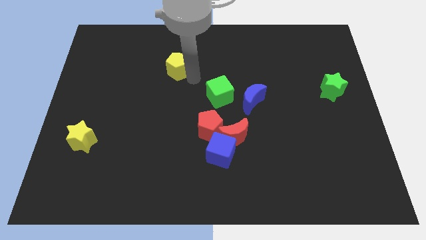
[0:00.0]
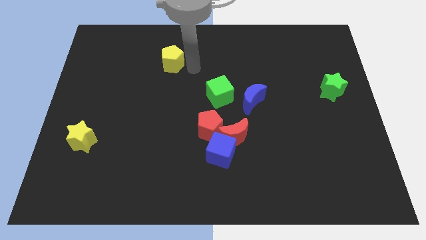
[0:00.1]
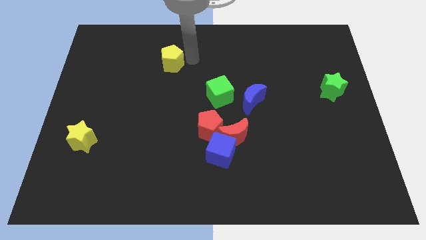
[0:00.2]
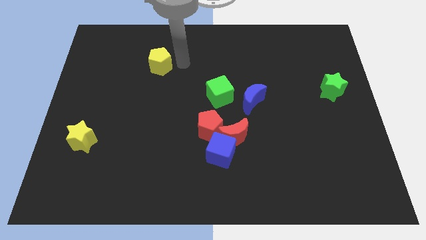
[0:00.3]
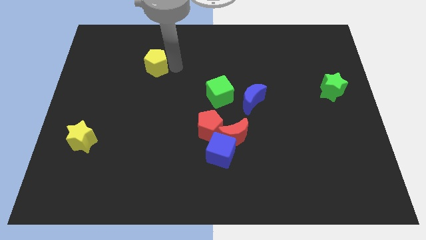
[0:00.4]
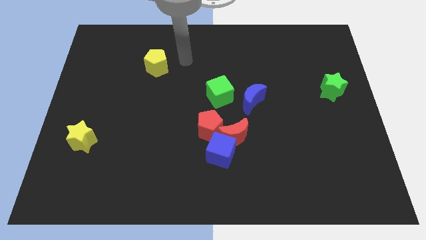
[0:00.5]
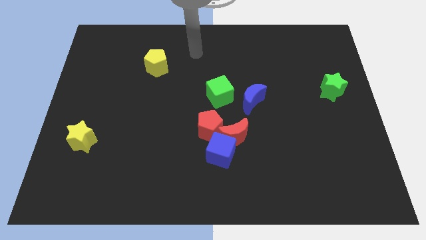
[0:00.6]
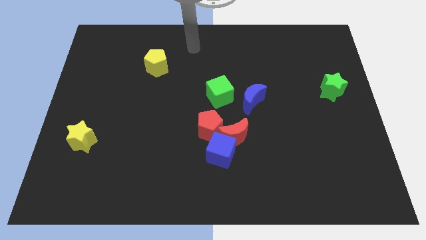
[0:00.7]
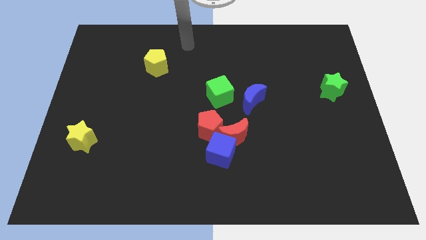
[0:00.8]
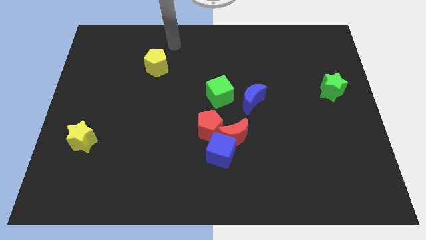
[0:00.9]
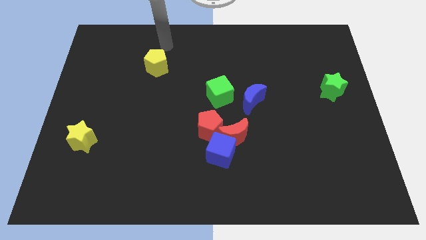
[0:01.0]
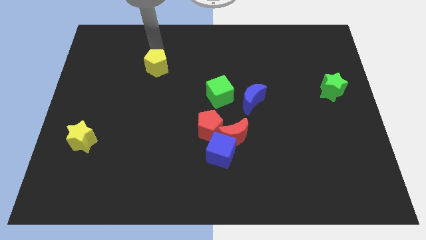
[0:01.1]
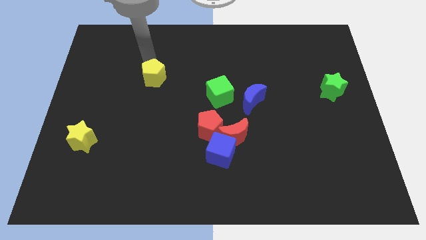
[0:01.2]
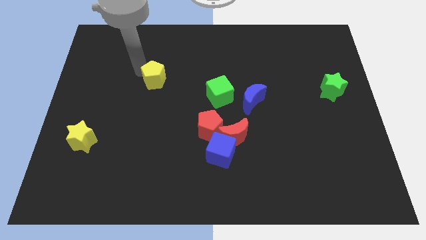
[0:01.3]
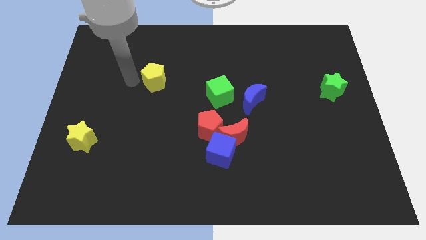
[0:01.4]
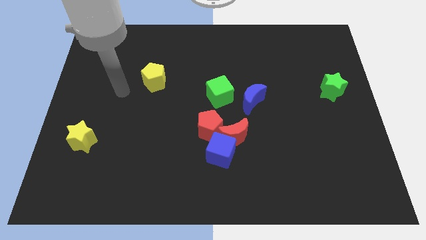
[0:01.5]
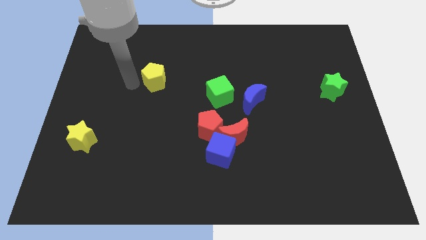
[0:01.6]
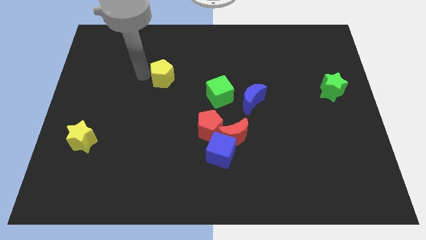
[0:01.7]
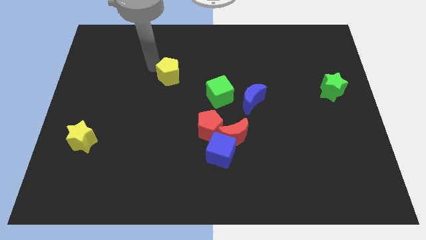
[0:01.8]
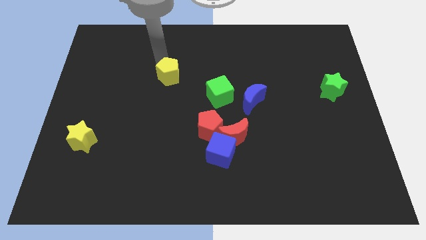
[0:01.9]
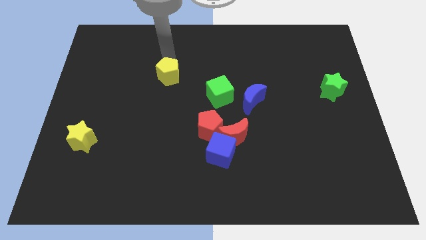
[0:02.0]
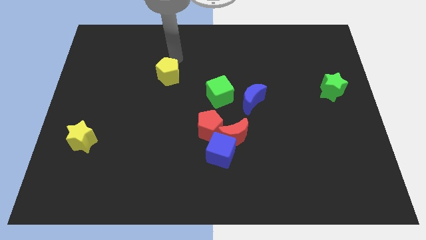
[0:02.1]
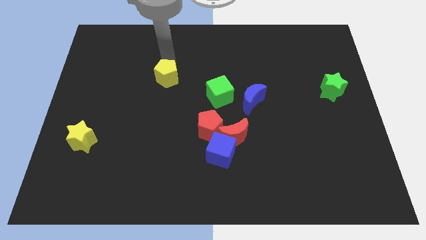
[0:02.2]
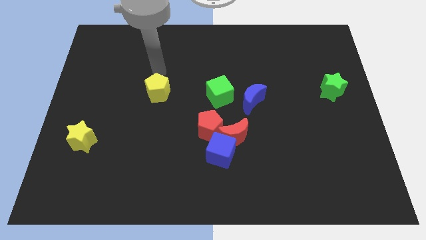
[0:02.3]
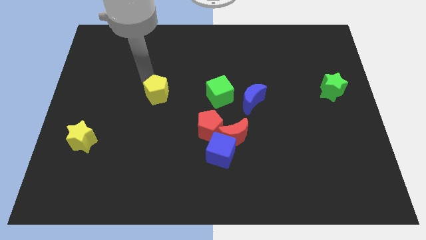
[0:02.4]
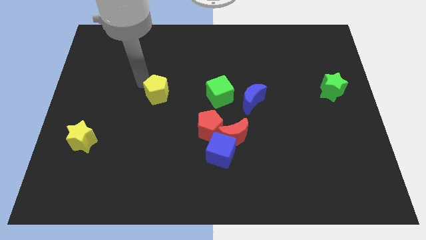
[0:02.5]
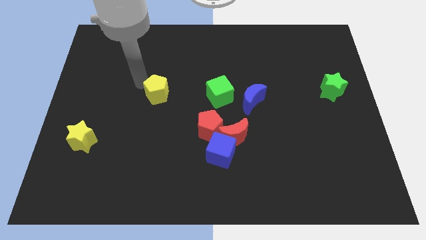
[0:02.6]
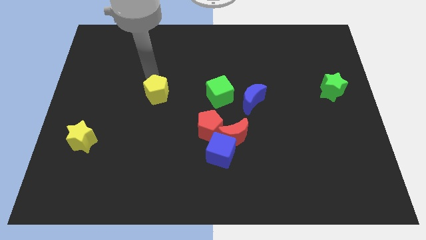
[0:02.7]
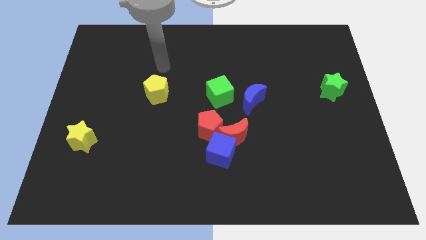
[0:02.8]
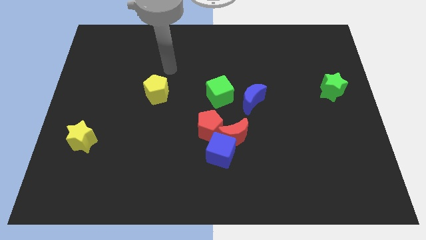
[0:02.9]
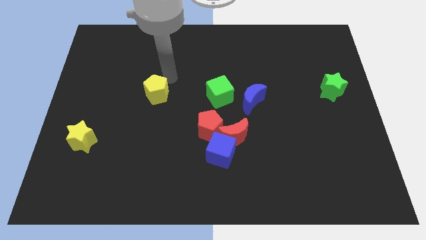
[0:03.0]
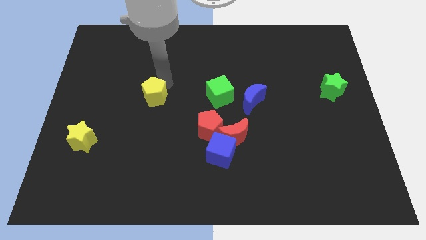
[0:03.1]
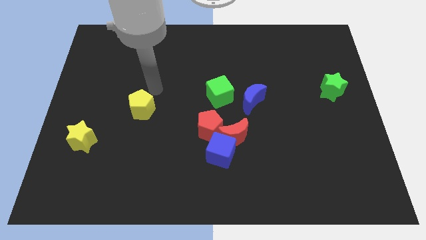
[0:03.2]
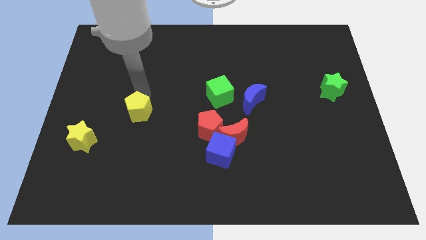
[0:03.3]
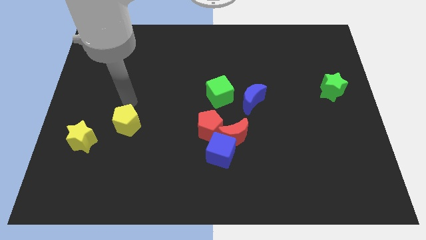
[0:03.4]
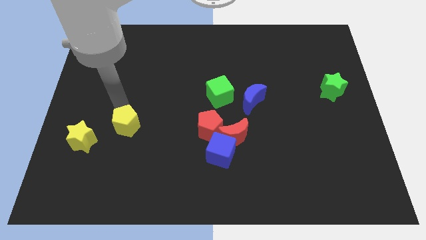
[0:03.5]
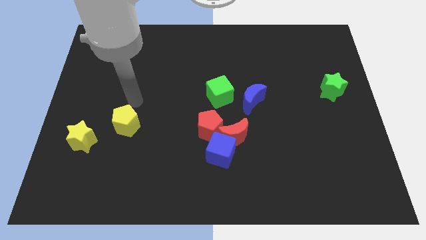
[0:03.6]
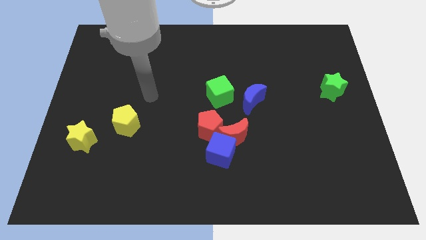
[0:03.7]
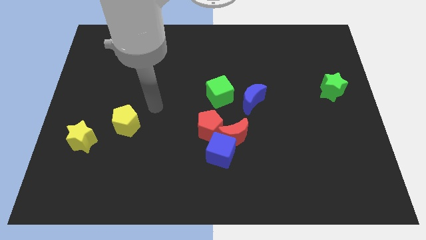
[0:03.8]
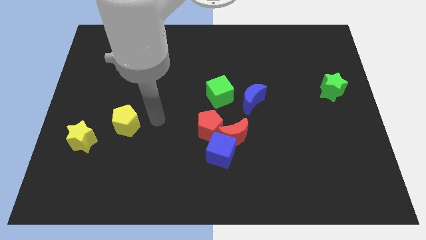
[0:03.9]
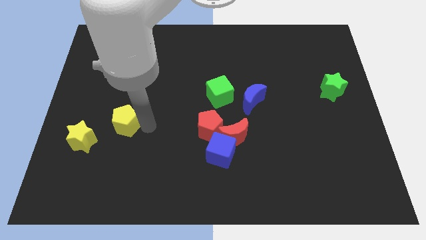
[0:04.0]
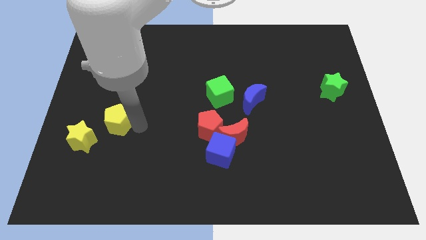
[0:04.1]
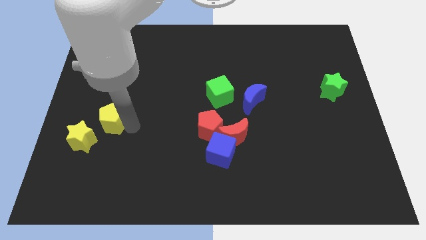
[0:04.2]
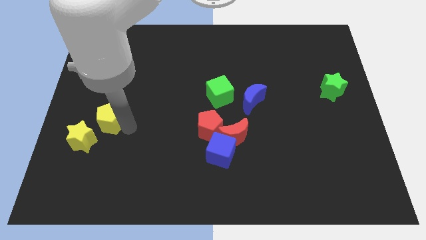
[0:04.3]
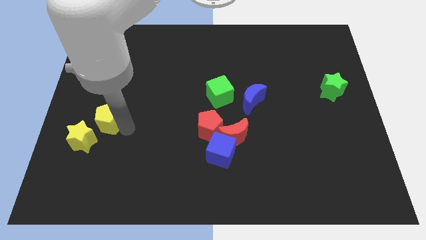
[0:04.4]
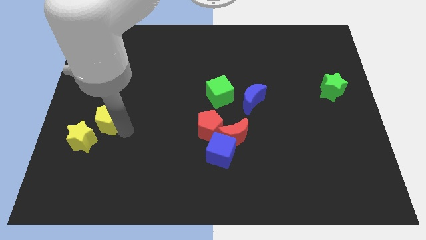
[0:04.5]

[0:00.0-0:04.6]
push the yellow pentagon close to the yellow star

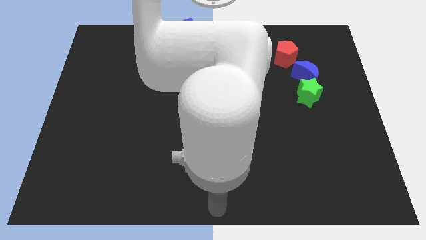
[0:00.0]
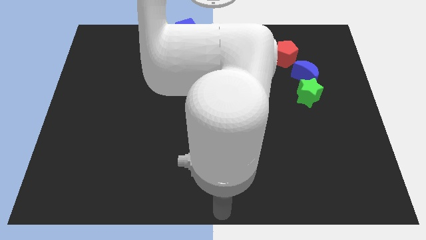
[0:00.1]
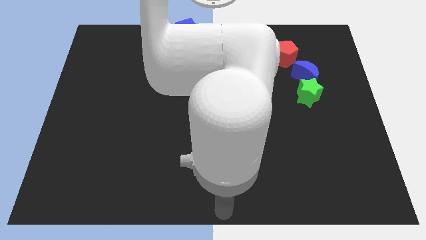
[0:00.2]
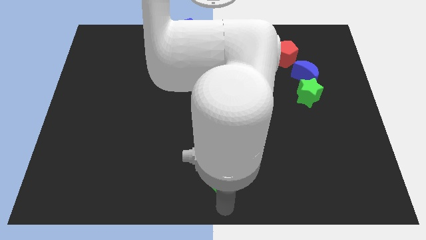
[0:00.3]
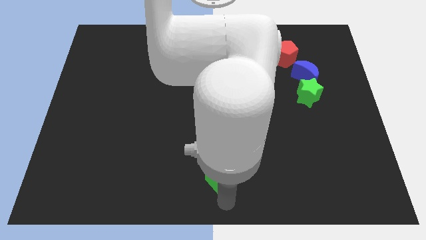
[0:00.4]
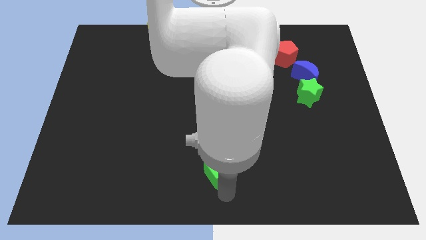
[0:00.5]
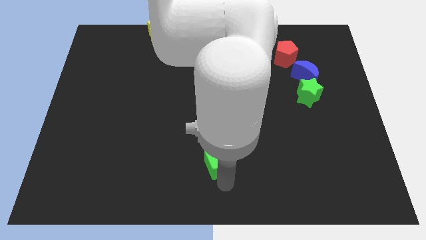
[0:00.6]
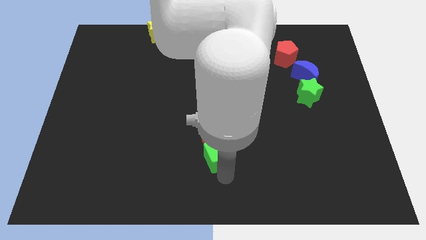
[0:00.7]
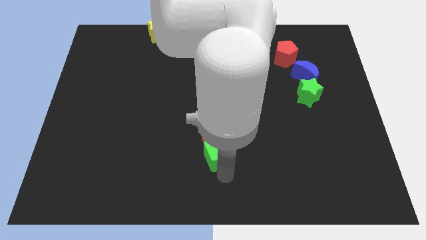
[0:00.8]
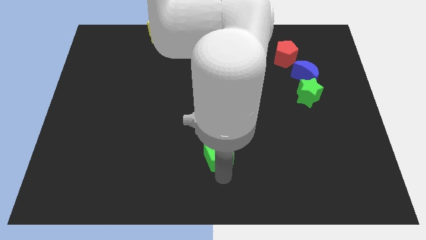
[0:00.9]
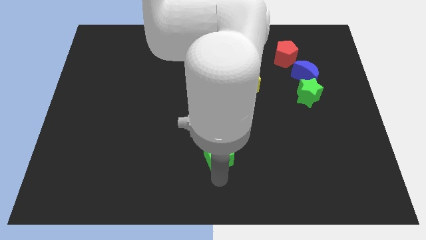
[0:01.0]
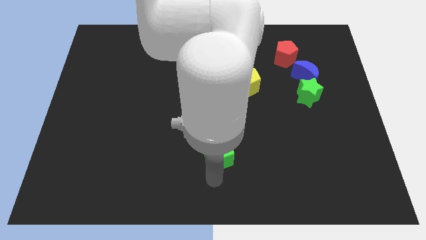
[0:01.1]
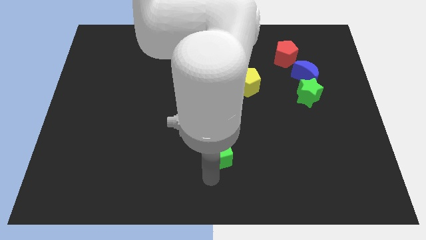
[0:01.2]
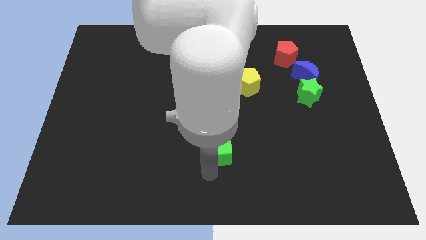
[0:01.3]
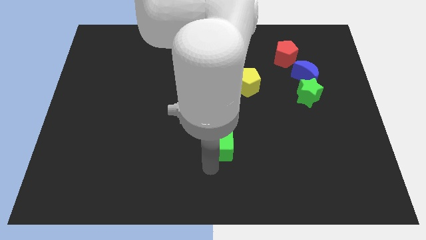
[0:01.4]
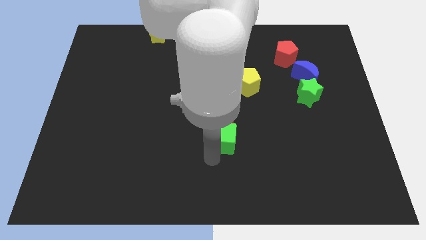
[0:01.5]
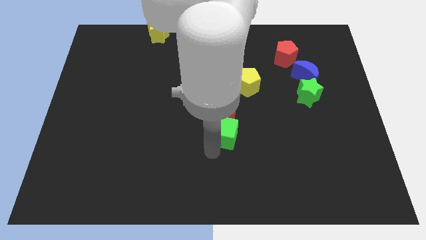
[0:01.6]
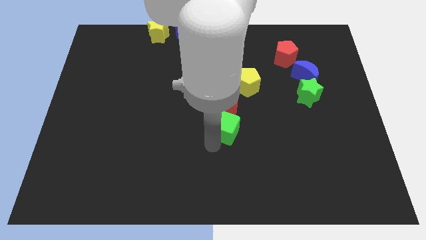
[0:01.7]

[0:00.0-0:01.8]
push the green cube and red moon towards the center of the board

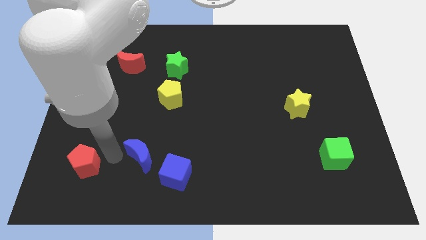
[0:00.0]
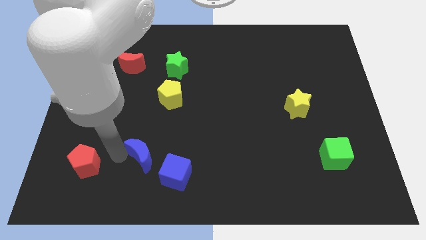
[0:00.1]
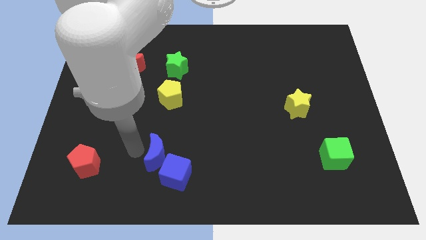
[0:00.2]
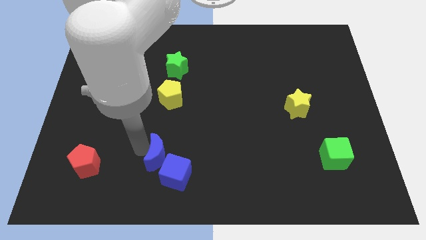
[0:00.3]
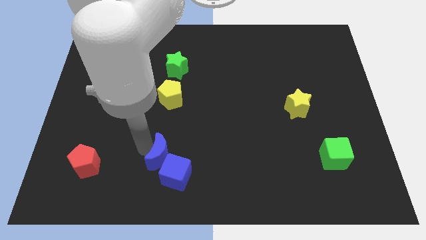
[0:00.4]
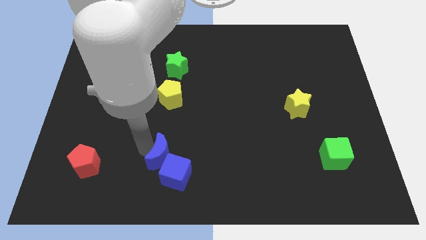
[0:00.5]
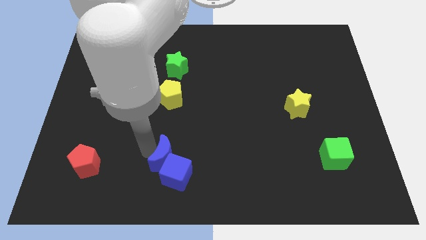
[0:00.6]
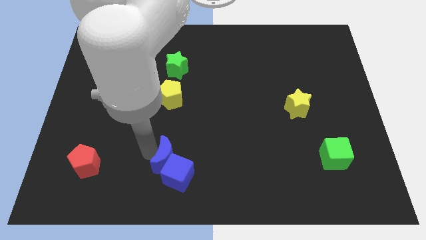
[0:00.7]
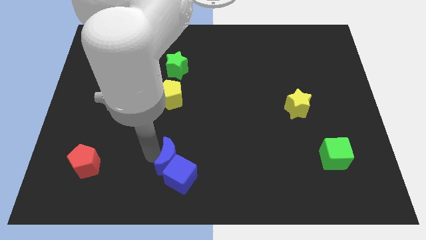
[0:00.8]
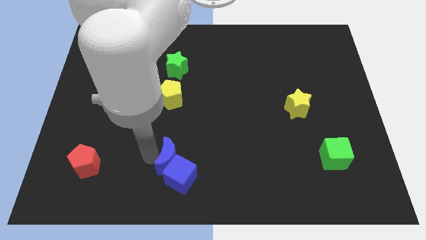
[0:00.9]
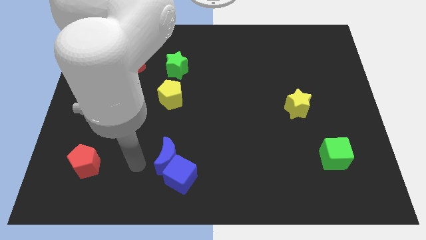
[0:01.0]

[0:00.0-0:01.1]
move blue moon into blue cube

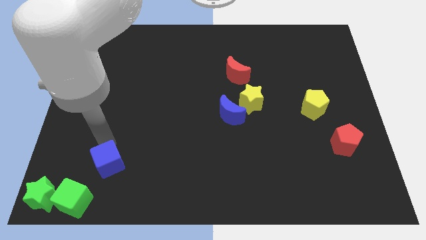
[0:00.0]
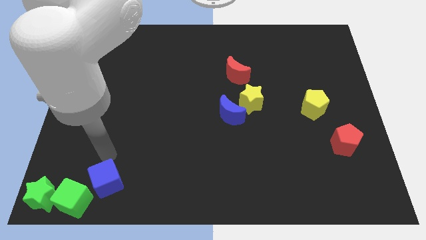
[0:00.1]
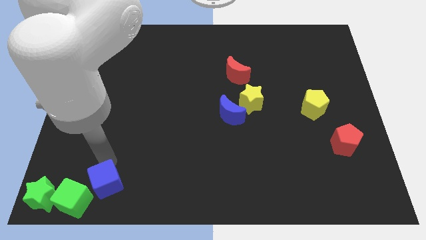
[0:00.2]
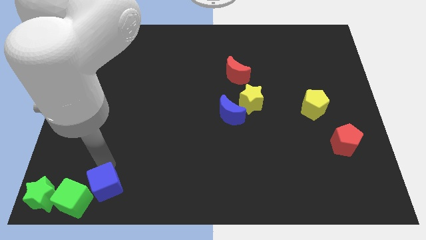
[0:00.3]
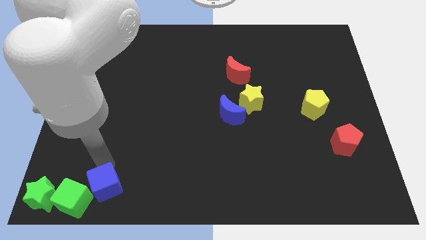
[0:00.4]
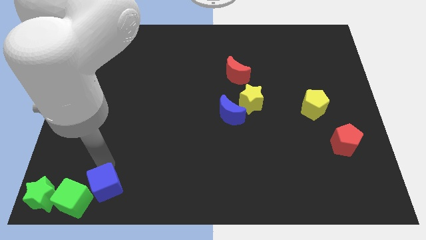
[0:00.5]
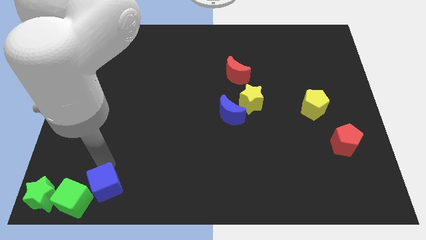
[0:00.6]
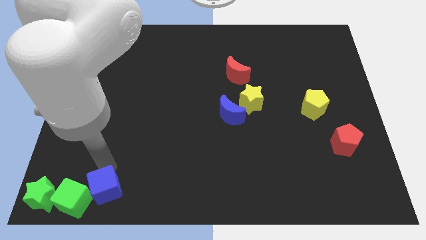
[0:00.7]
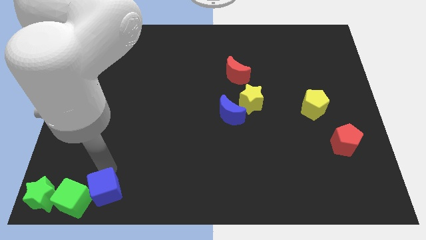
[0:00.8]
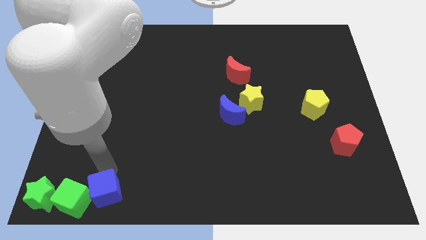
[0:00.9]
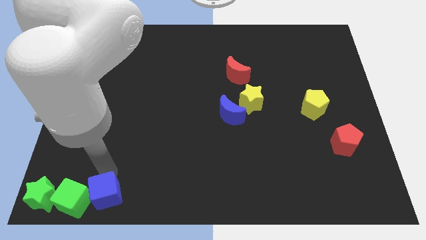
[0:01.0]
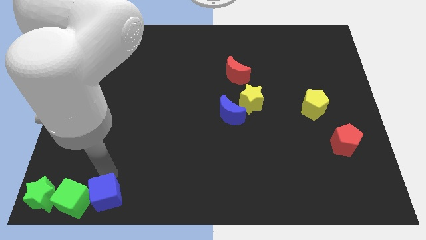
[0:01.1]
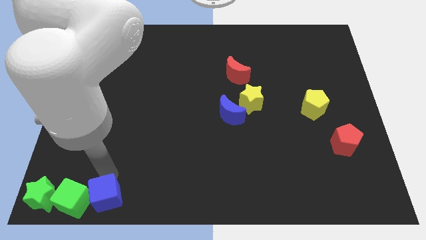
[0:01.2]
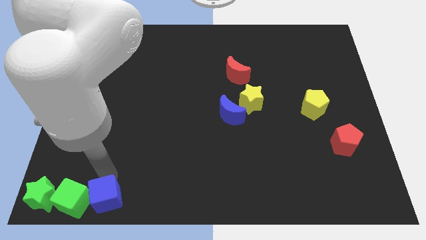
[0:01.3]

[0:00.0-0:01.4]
move the blue cube right to the green cube
